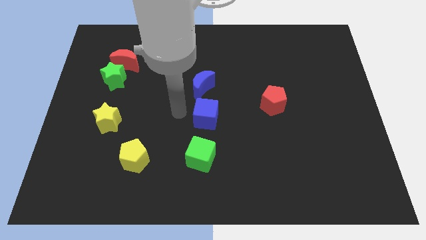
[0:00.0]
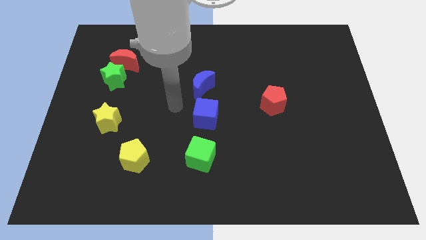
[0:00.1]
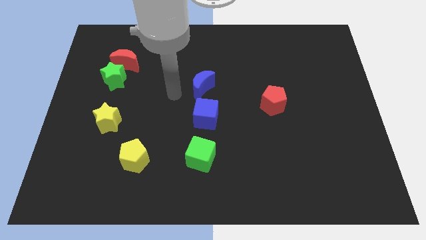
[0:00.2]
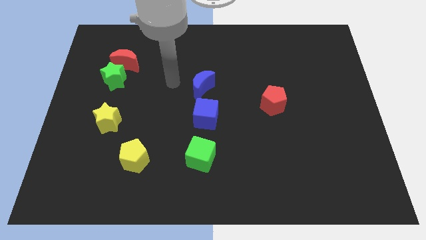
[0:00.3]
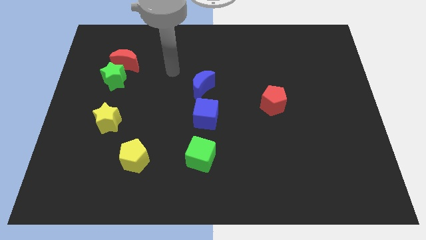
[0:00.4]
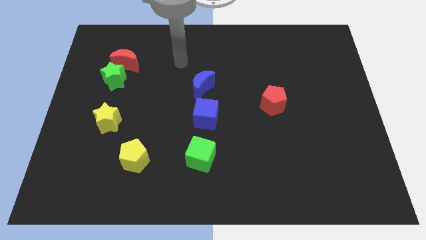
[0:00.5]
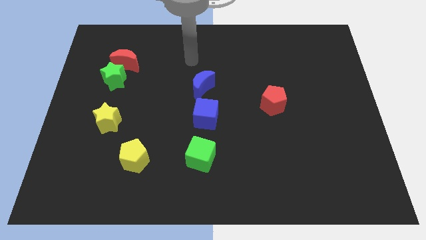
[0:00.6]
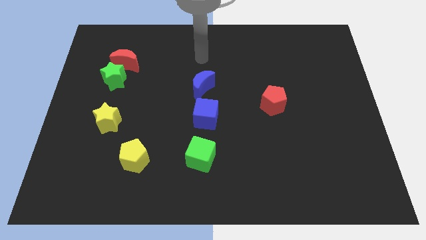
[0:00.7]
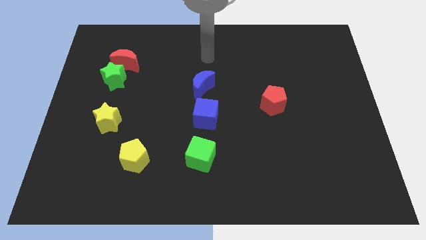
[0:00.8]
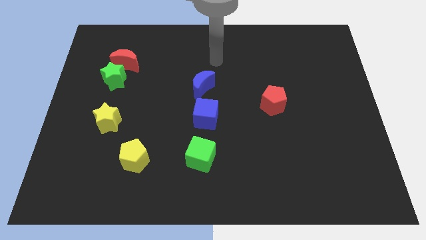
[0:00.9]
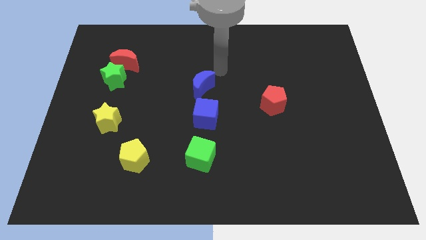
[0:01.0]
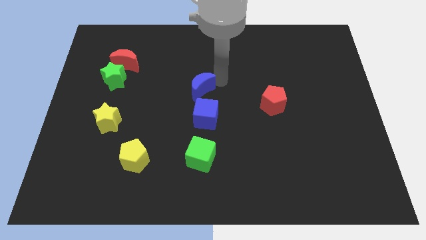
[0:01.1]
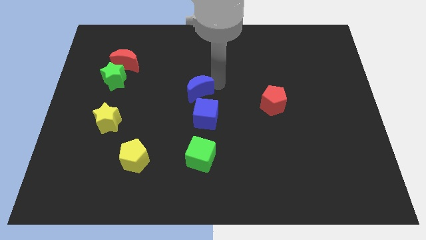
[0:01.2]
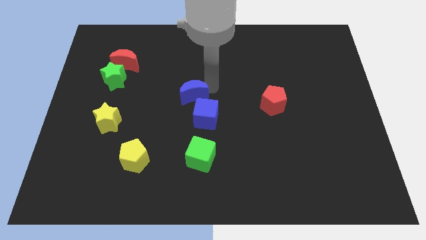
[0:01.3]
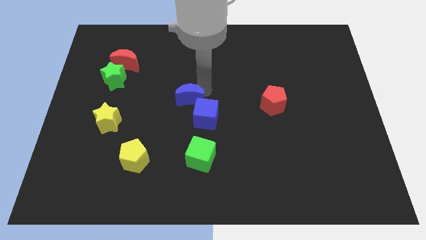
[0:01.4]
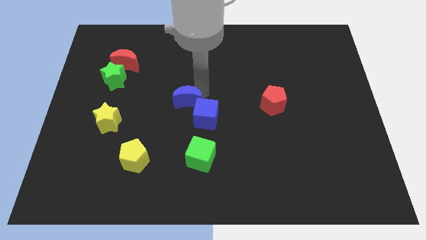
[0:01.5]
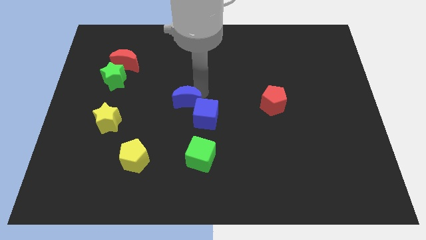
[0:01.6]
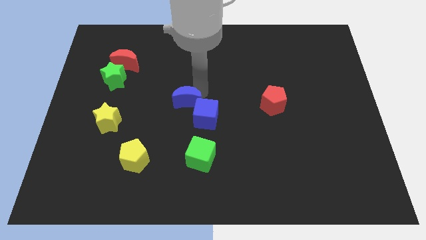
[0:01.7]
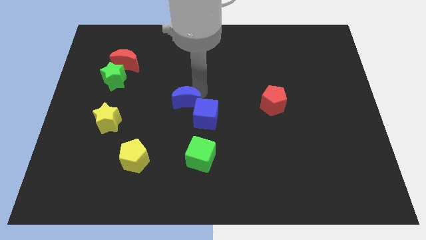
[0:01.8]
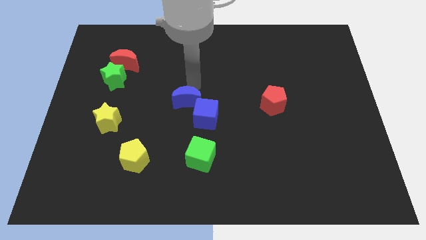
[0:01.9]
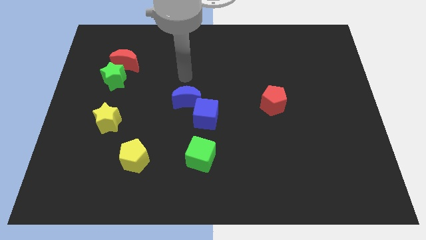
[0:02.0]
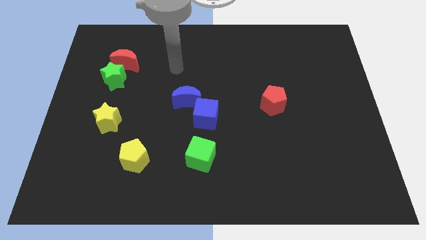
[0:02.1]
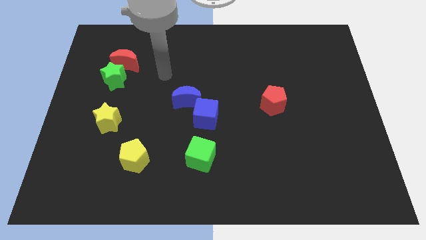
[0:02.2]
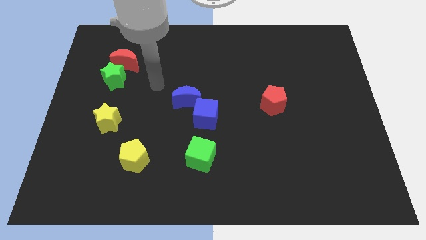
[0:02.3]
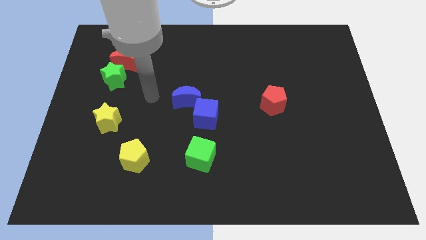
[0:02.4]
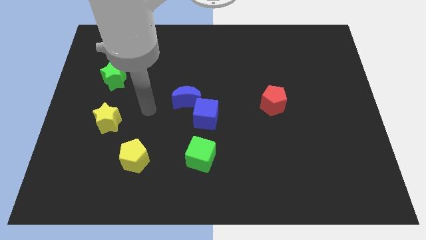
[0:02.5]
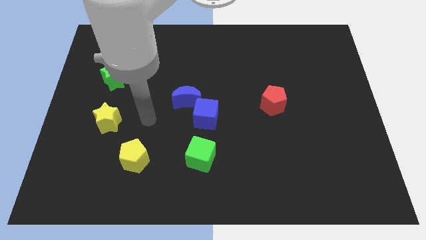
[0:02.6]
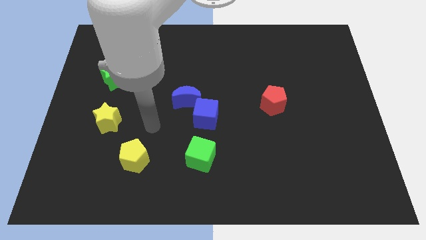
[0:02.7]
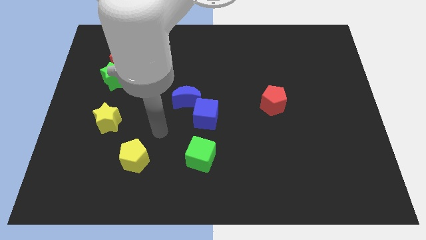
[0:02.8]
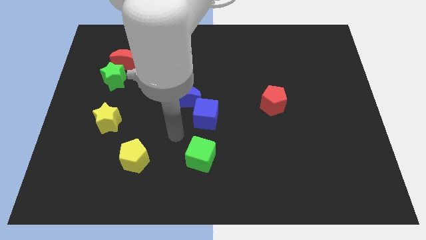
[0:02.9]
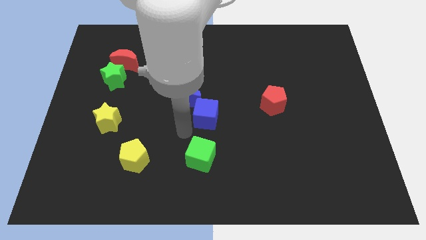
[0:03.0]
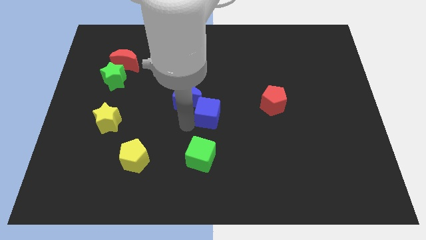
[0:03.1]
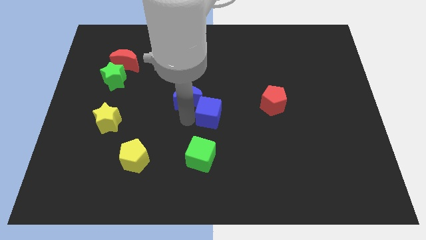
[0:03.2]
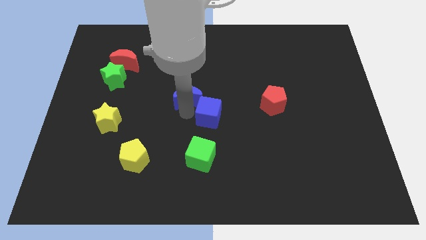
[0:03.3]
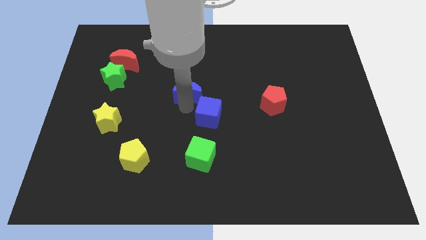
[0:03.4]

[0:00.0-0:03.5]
move the blue crescent left above the blue cube

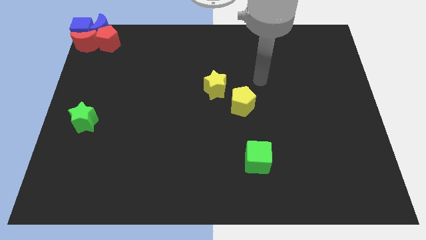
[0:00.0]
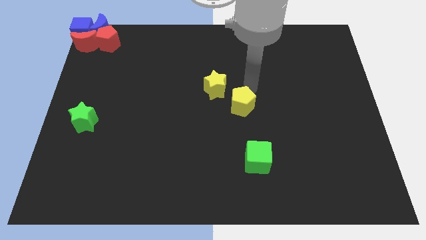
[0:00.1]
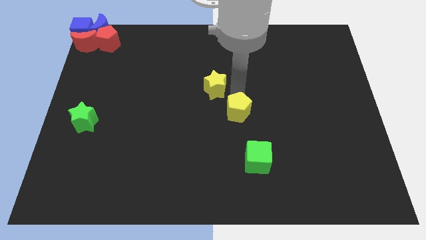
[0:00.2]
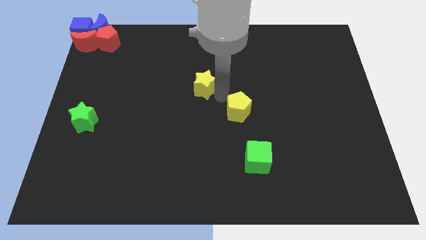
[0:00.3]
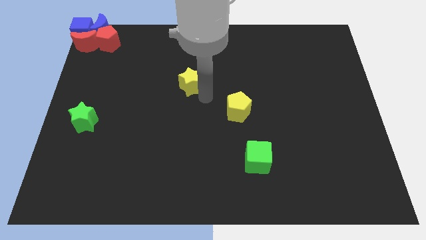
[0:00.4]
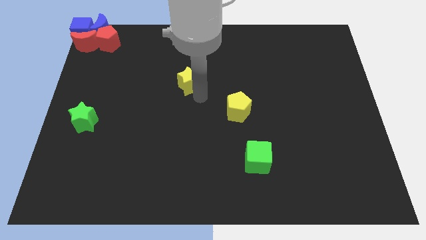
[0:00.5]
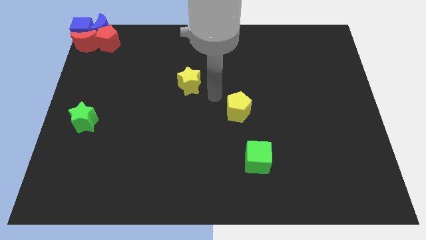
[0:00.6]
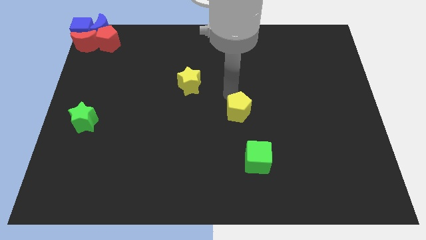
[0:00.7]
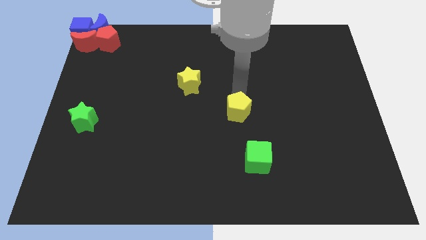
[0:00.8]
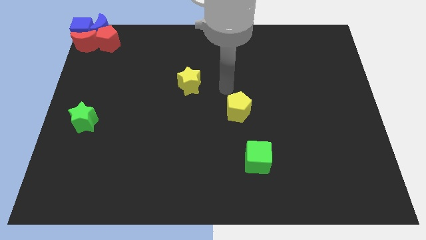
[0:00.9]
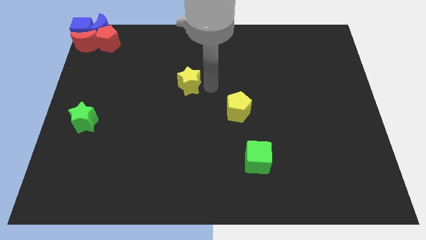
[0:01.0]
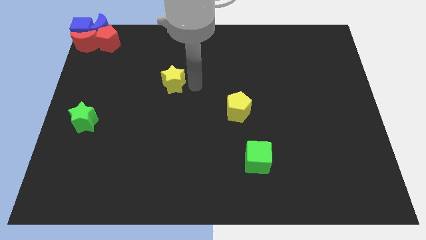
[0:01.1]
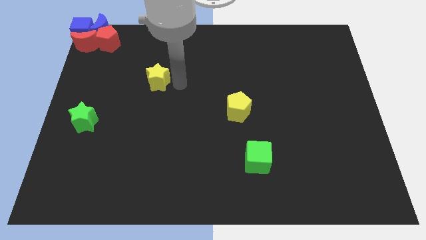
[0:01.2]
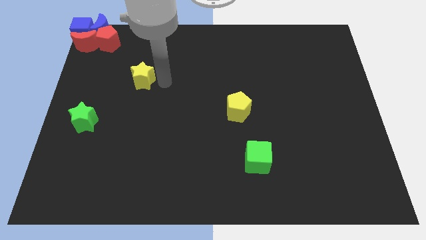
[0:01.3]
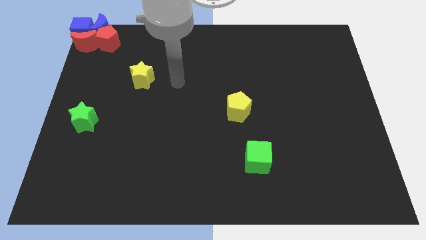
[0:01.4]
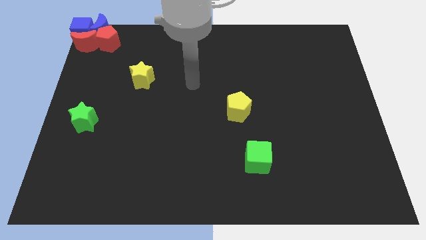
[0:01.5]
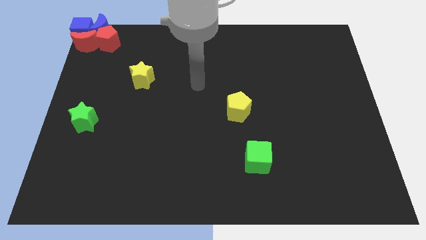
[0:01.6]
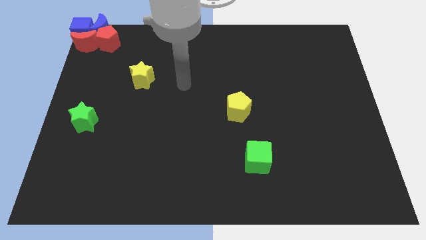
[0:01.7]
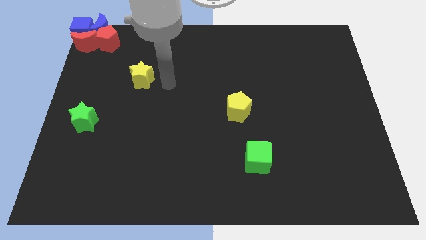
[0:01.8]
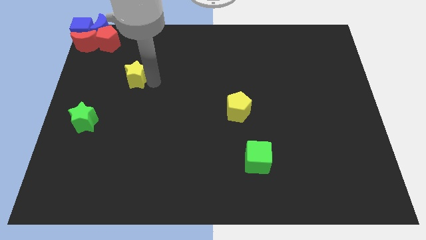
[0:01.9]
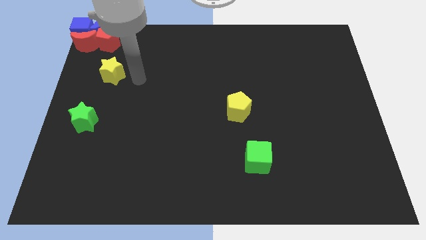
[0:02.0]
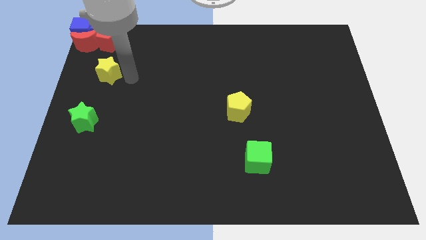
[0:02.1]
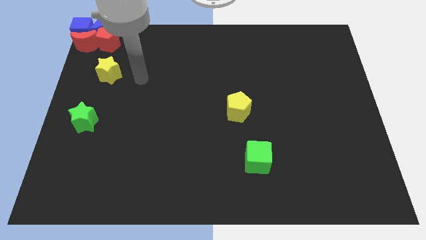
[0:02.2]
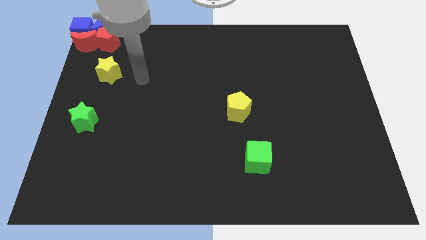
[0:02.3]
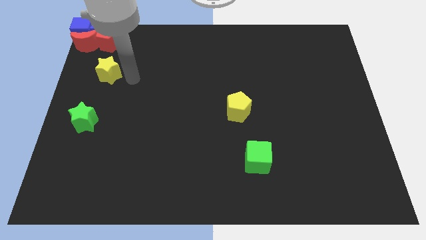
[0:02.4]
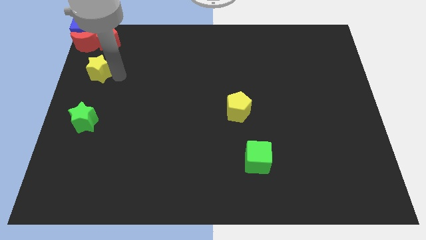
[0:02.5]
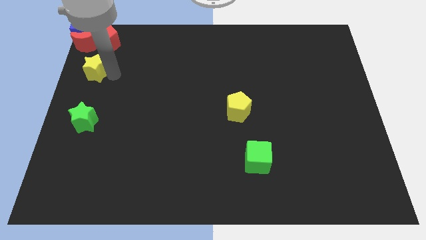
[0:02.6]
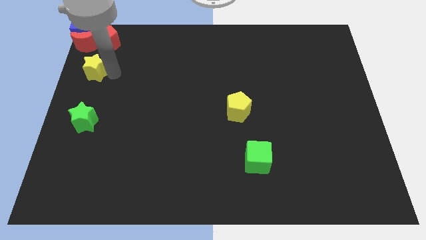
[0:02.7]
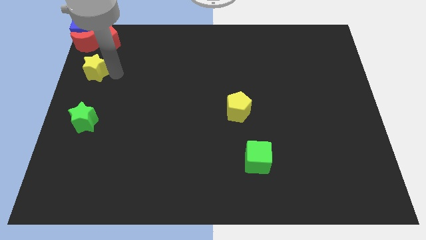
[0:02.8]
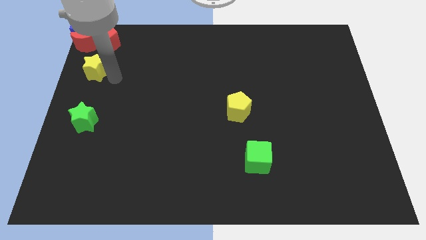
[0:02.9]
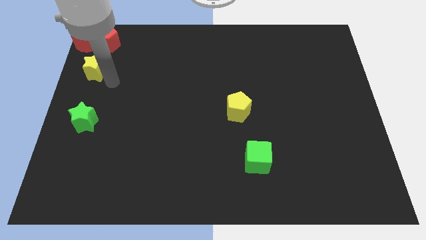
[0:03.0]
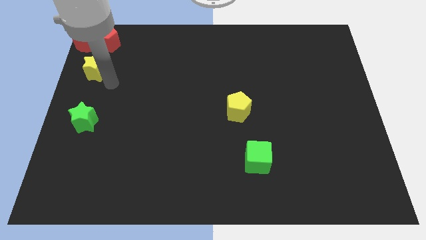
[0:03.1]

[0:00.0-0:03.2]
move the yellow star below the group of blocks

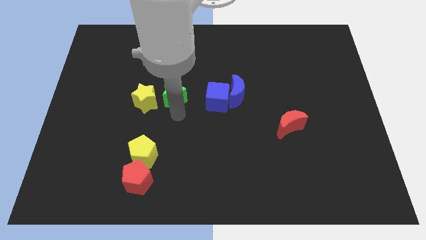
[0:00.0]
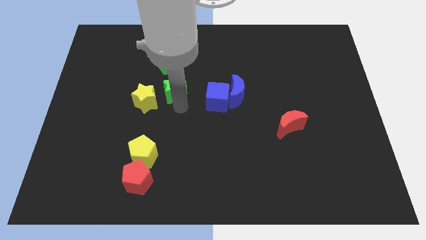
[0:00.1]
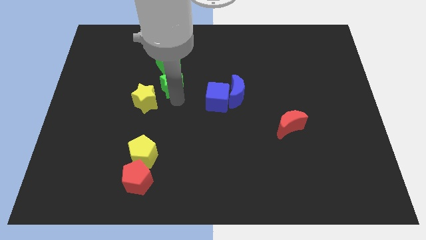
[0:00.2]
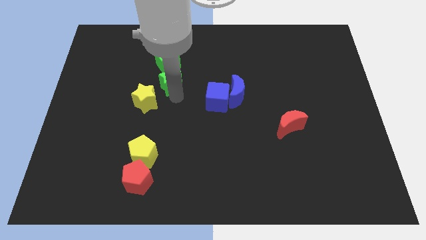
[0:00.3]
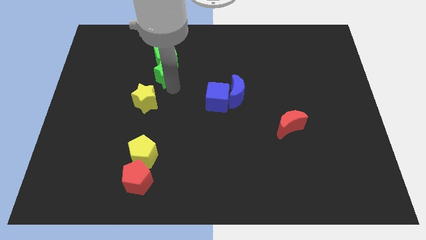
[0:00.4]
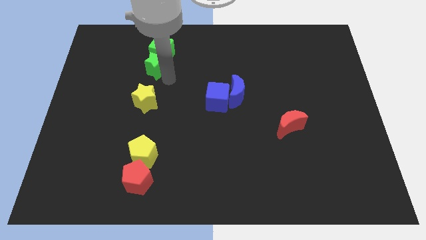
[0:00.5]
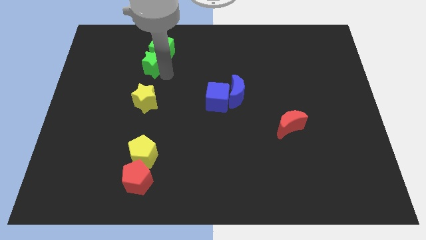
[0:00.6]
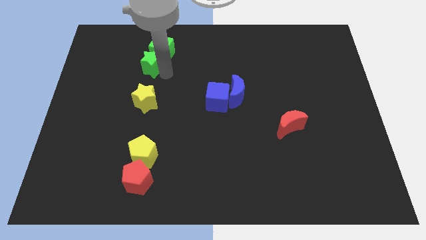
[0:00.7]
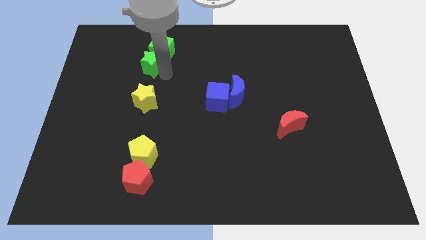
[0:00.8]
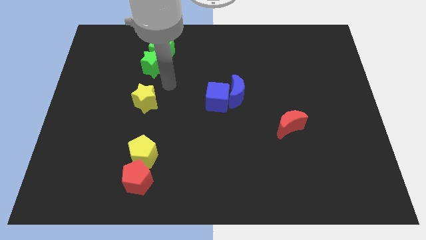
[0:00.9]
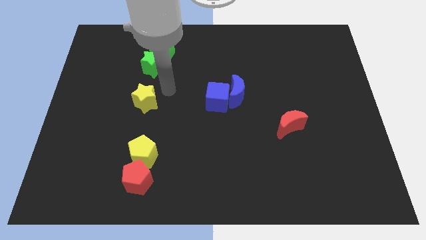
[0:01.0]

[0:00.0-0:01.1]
move the green star below the green cube

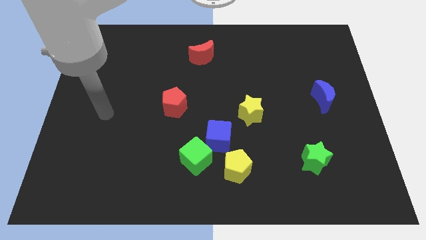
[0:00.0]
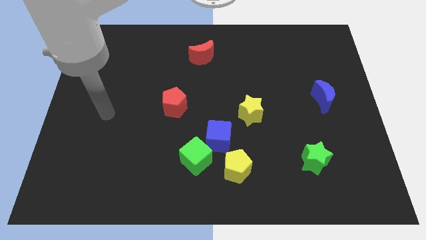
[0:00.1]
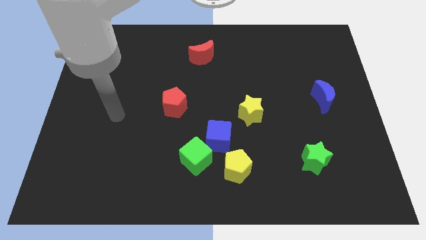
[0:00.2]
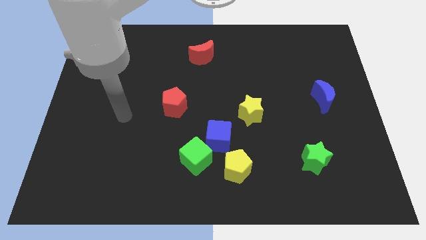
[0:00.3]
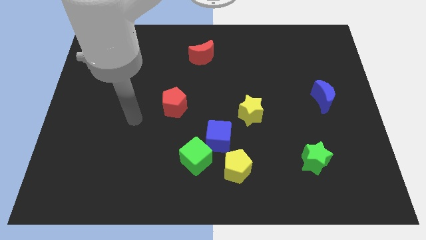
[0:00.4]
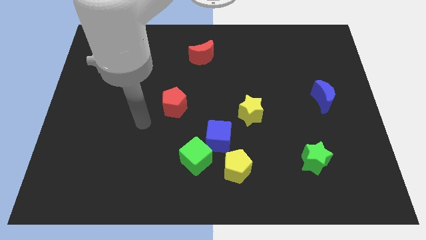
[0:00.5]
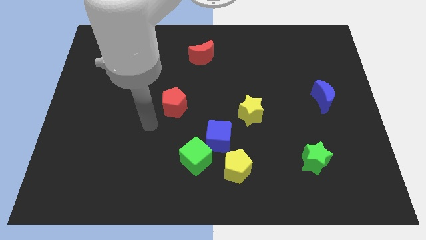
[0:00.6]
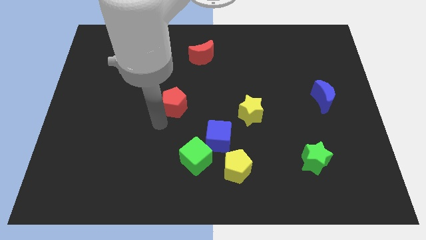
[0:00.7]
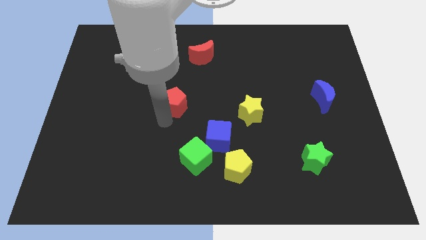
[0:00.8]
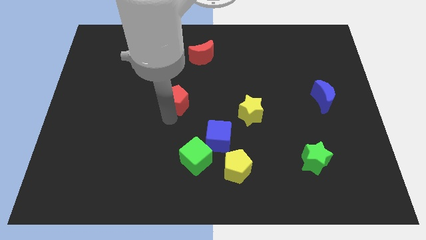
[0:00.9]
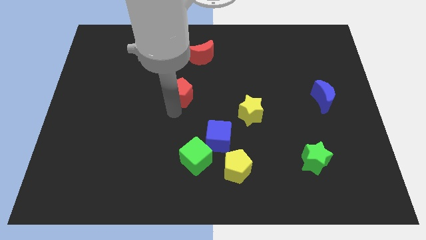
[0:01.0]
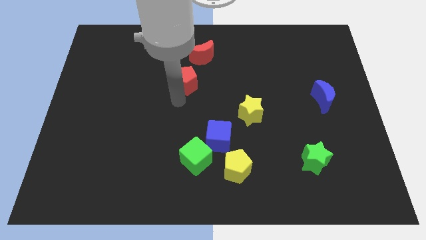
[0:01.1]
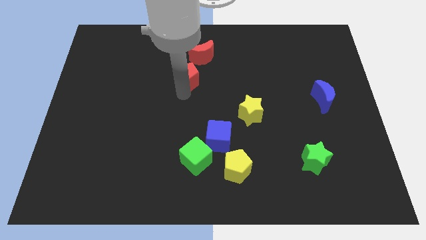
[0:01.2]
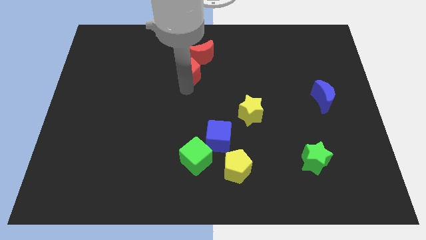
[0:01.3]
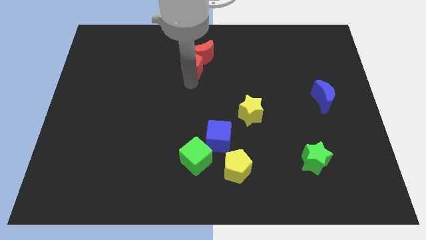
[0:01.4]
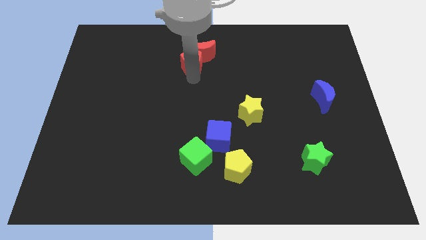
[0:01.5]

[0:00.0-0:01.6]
push the red pentagon into the red moon
